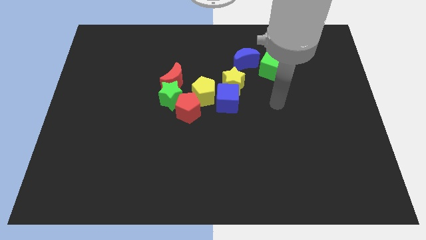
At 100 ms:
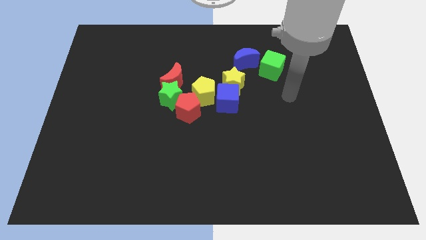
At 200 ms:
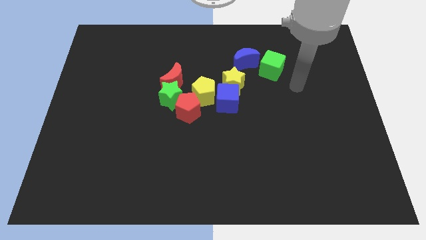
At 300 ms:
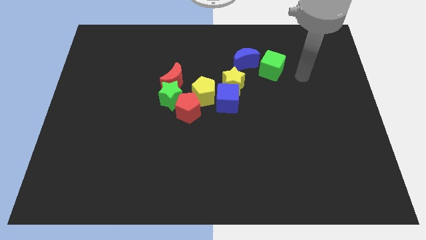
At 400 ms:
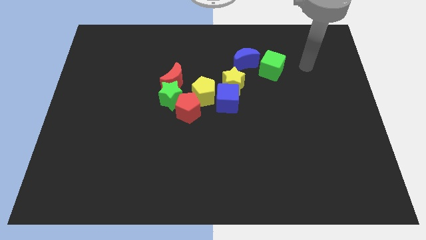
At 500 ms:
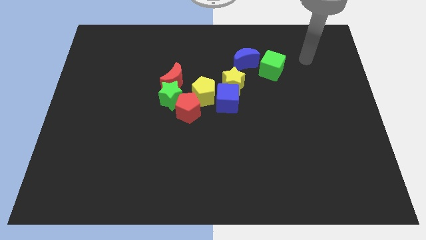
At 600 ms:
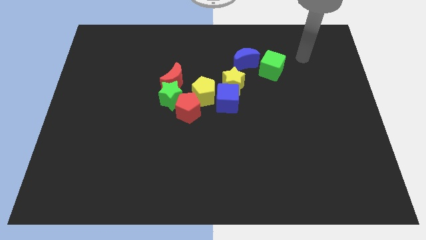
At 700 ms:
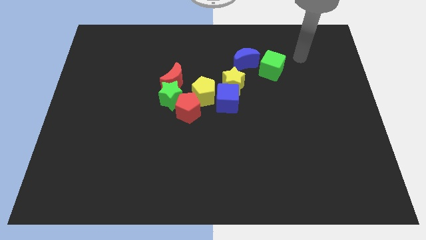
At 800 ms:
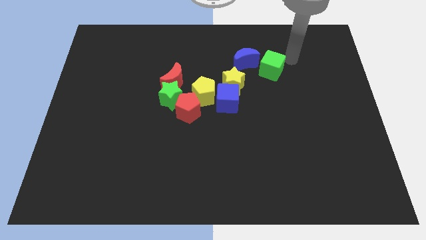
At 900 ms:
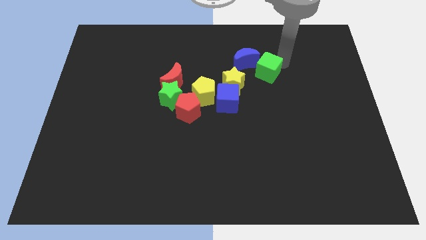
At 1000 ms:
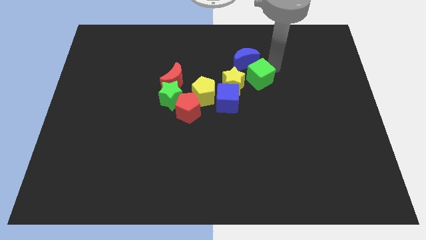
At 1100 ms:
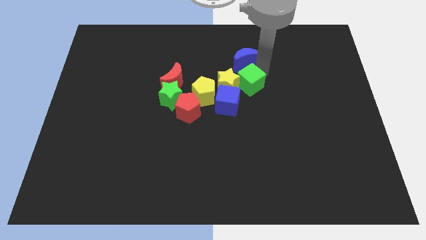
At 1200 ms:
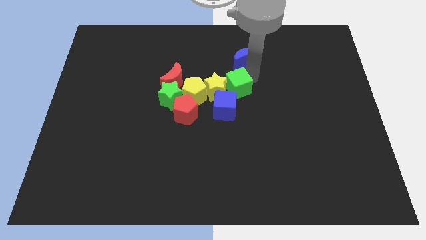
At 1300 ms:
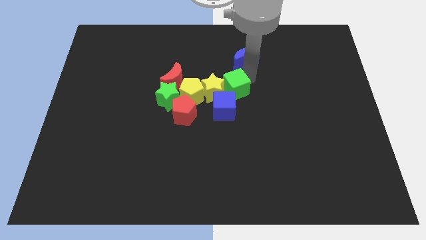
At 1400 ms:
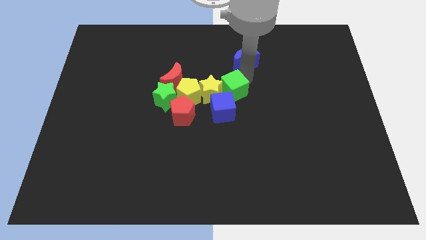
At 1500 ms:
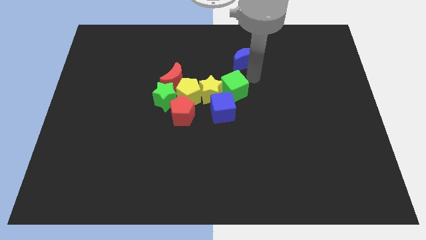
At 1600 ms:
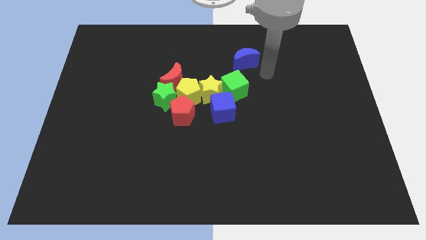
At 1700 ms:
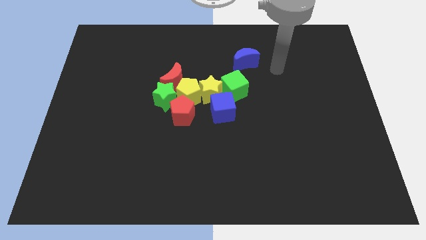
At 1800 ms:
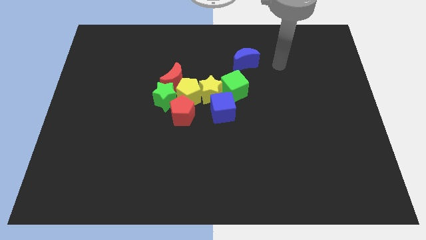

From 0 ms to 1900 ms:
push green cube above the blue cube

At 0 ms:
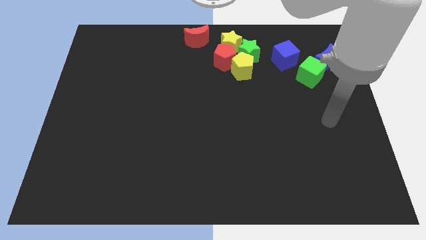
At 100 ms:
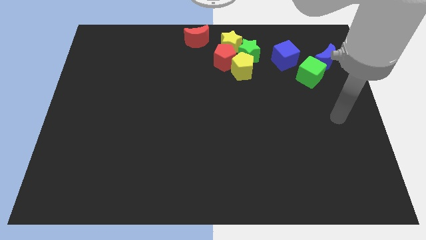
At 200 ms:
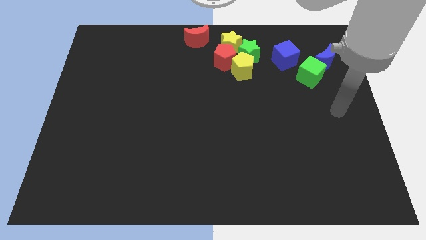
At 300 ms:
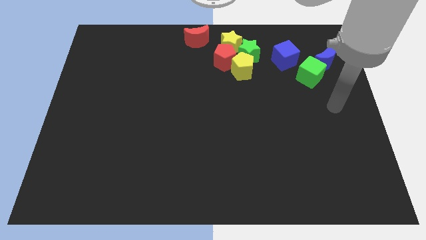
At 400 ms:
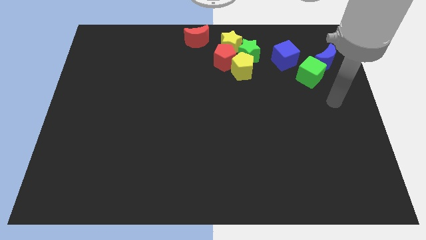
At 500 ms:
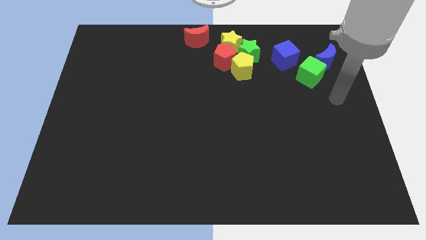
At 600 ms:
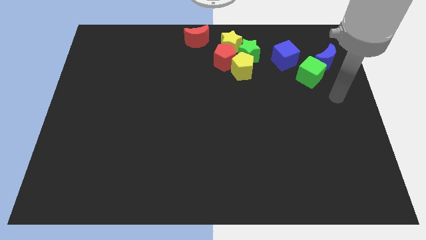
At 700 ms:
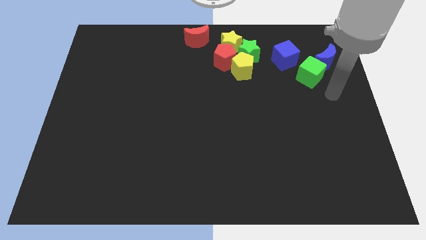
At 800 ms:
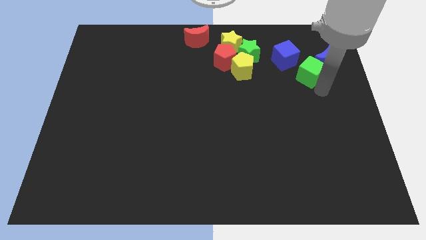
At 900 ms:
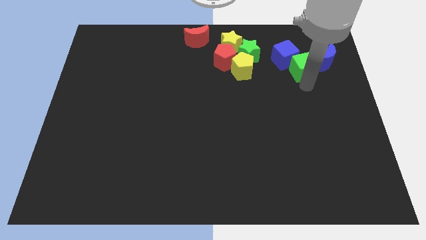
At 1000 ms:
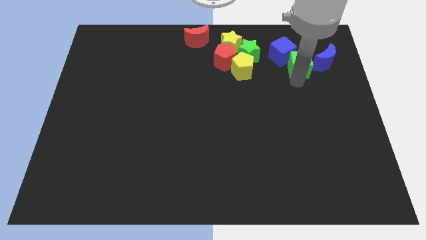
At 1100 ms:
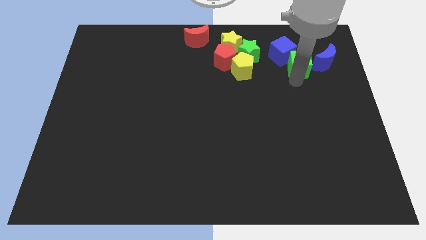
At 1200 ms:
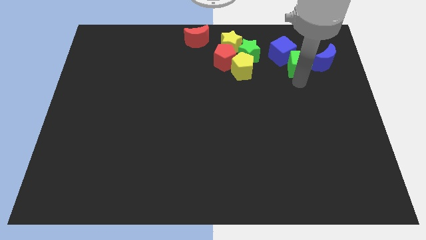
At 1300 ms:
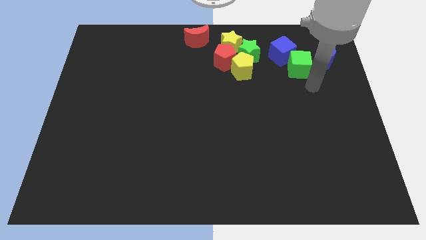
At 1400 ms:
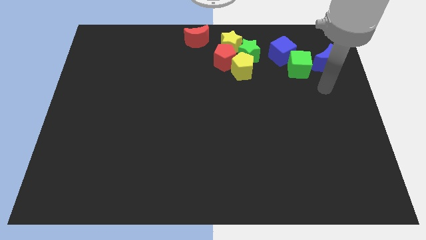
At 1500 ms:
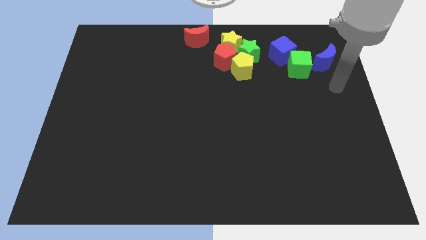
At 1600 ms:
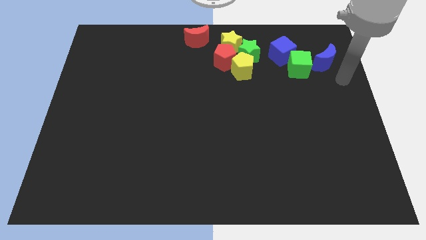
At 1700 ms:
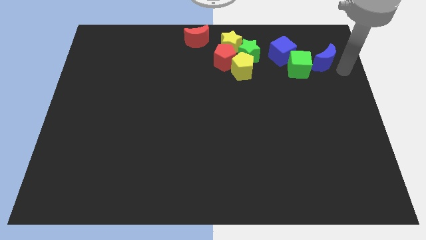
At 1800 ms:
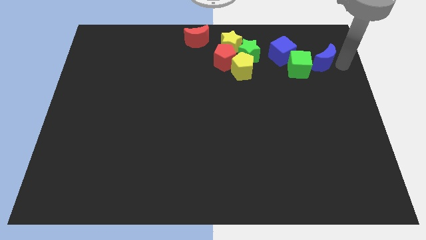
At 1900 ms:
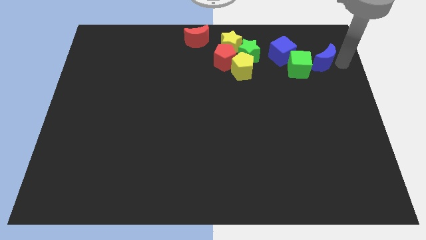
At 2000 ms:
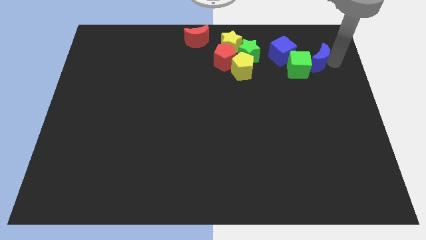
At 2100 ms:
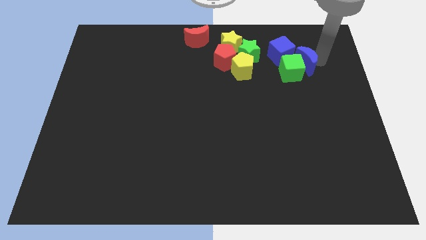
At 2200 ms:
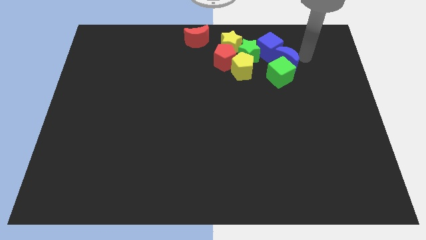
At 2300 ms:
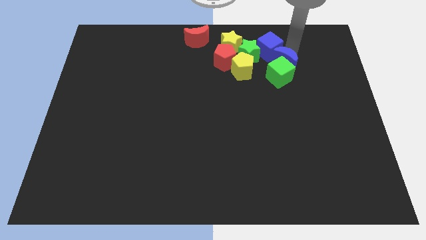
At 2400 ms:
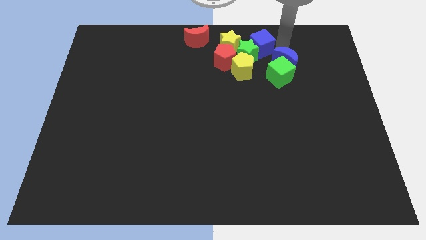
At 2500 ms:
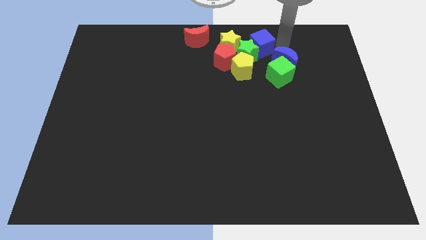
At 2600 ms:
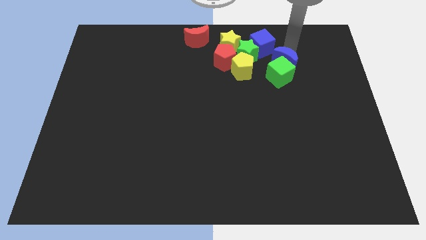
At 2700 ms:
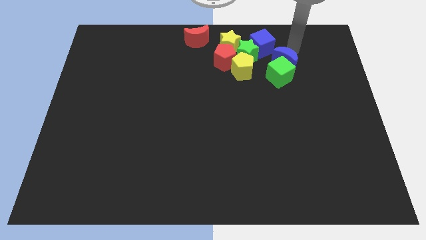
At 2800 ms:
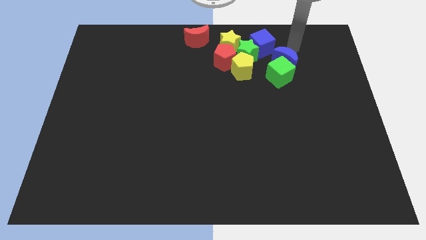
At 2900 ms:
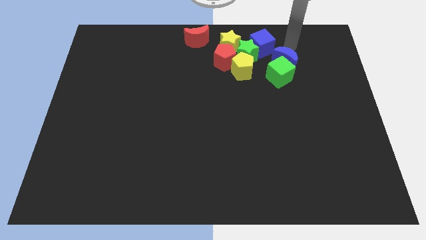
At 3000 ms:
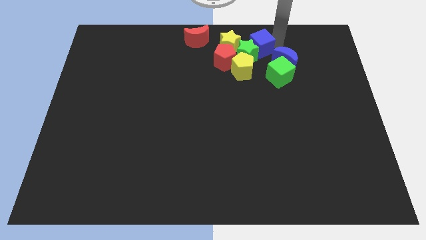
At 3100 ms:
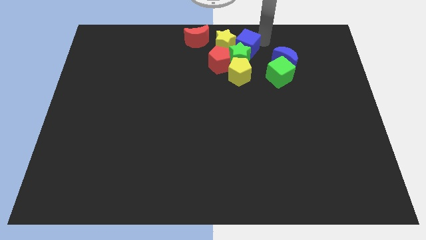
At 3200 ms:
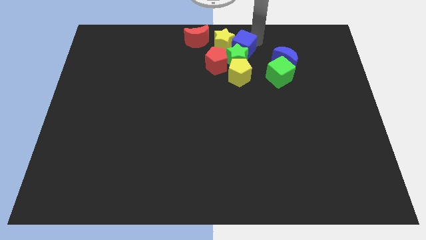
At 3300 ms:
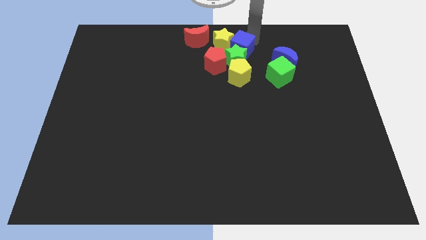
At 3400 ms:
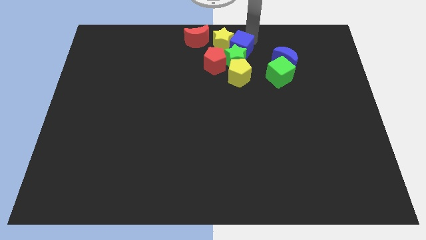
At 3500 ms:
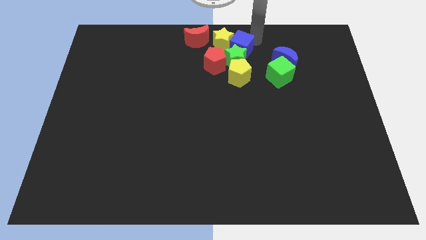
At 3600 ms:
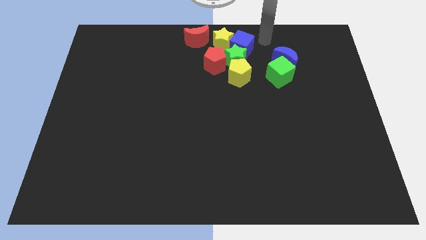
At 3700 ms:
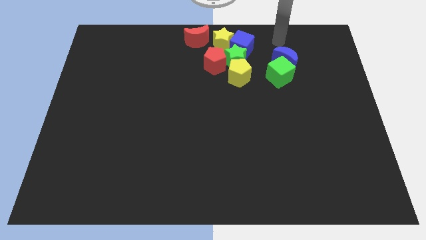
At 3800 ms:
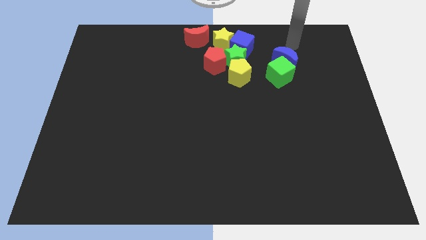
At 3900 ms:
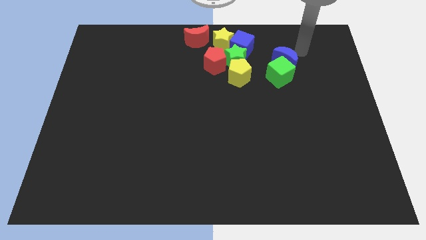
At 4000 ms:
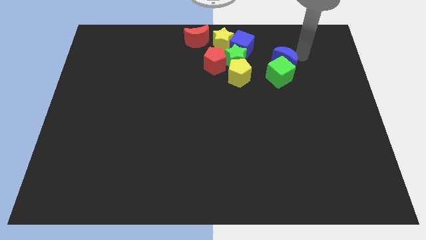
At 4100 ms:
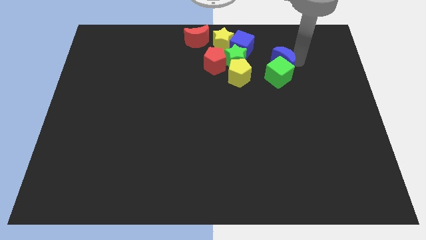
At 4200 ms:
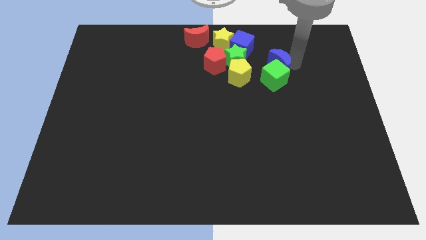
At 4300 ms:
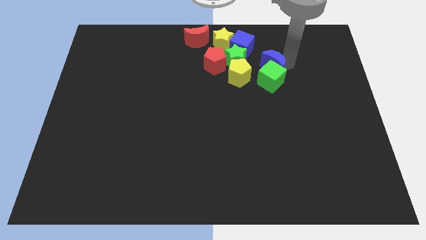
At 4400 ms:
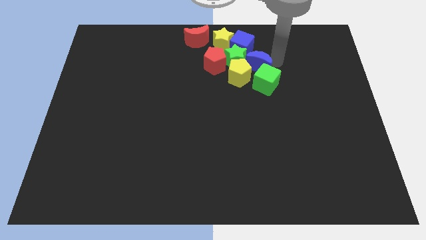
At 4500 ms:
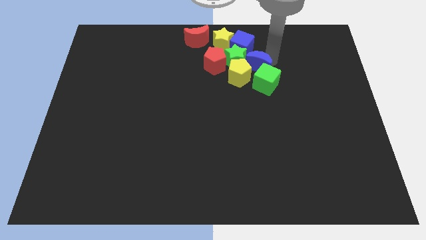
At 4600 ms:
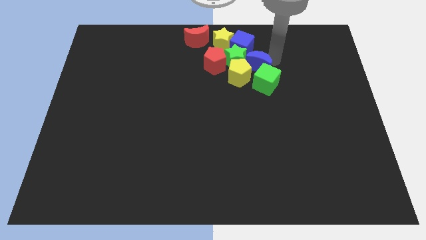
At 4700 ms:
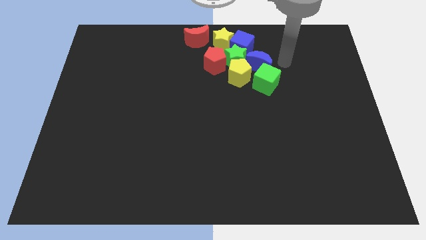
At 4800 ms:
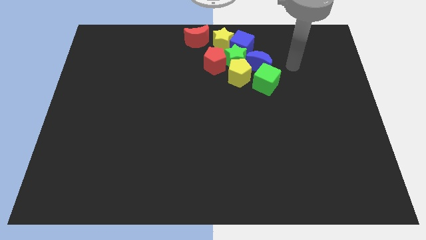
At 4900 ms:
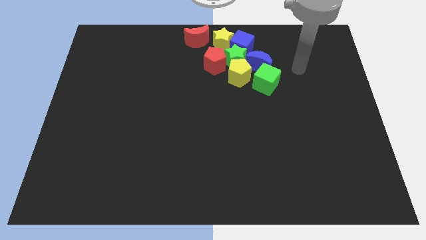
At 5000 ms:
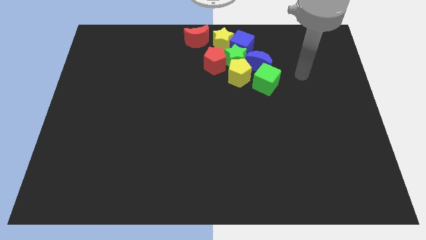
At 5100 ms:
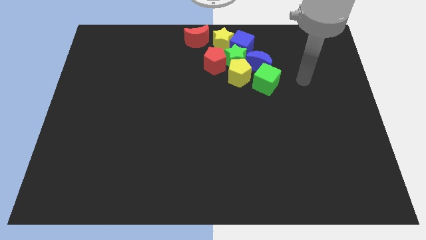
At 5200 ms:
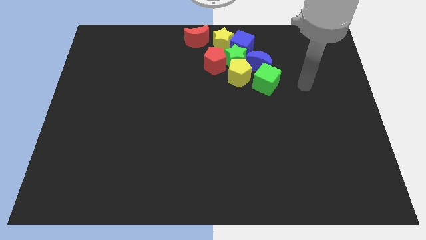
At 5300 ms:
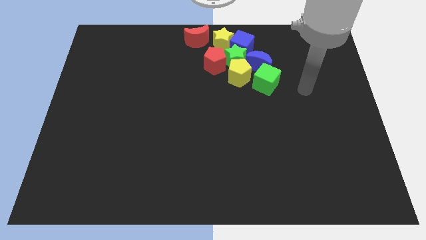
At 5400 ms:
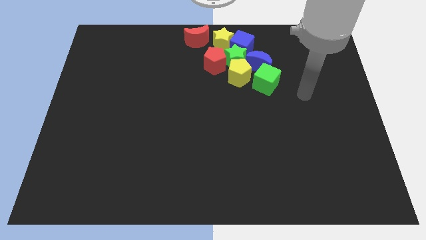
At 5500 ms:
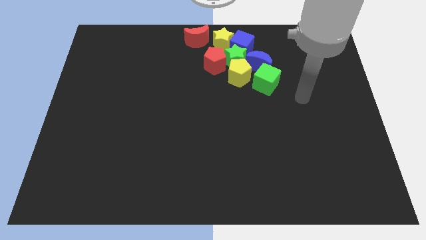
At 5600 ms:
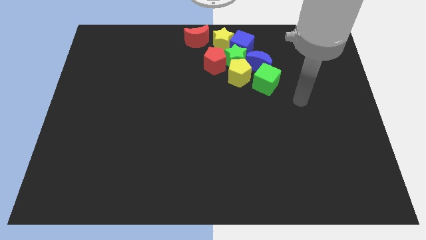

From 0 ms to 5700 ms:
push the blue blocks and green cube towards the group of blocks

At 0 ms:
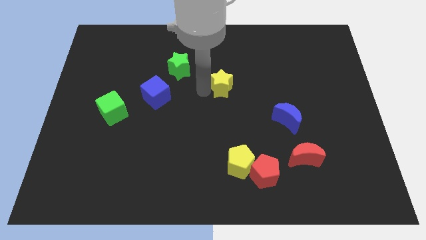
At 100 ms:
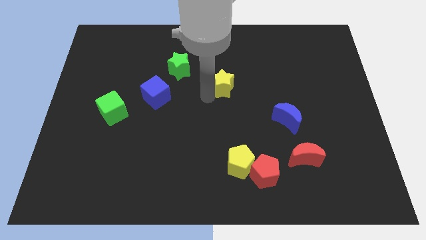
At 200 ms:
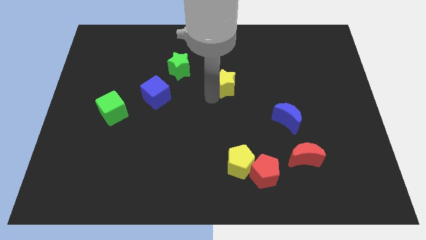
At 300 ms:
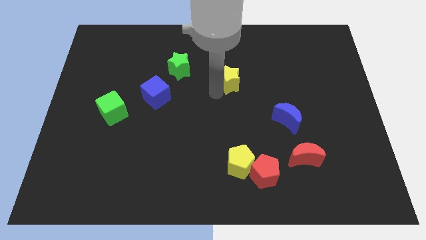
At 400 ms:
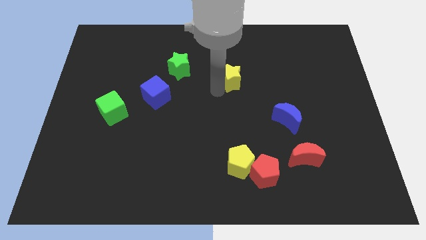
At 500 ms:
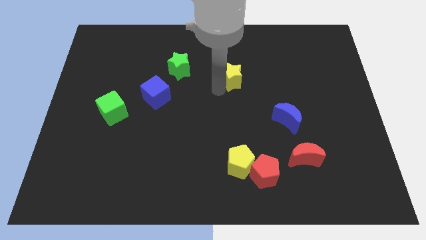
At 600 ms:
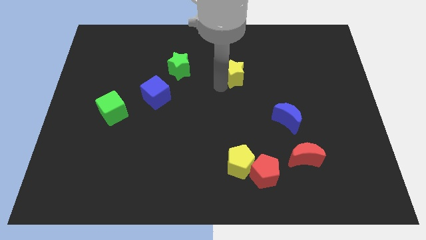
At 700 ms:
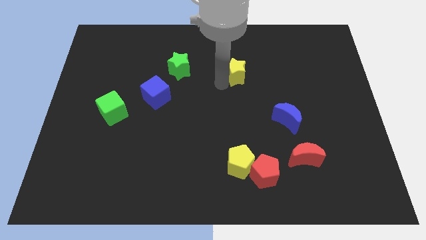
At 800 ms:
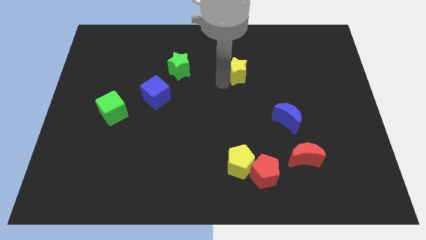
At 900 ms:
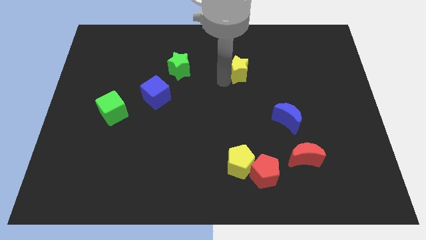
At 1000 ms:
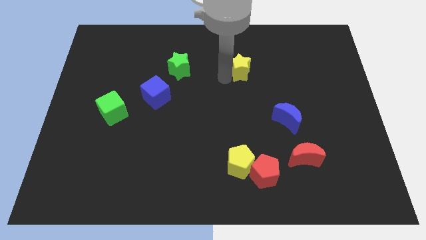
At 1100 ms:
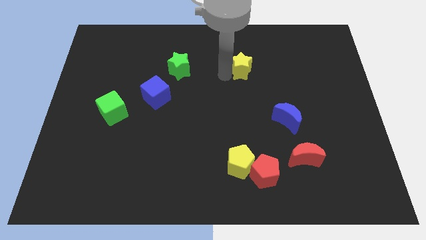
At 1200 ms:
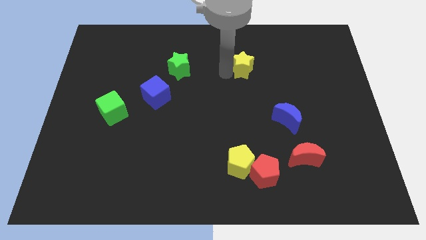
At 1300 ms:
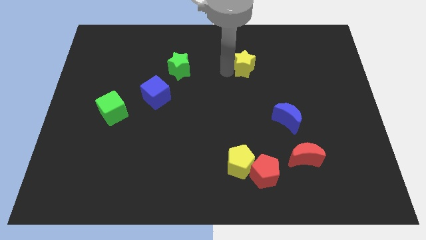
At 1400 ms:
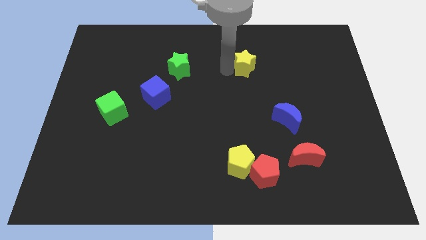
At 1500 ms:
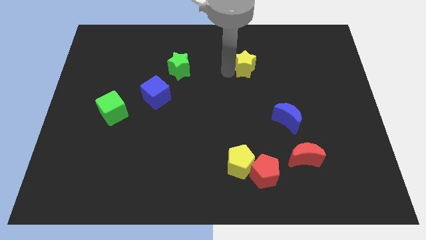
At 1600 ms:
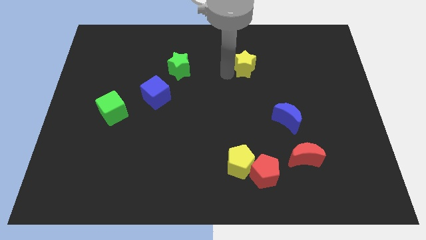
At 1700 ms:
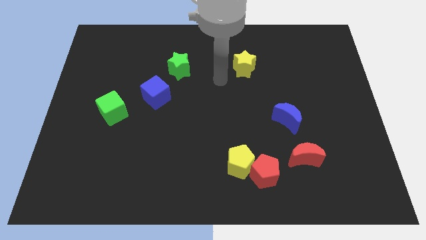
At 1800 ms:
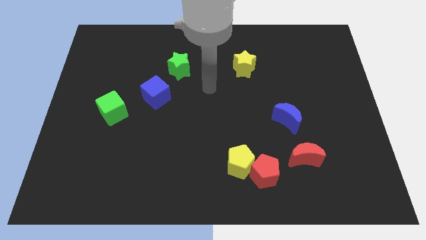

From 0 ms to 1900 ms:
place the yellow star to right side of the green star
